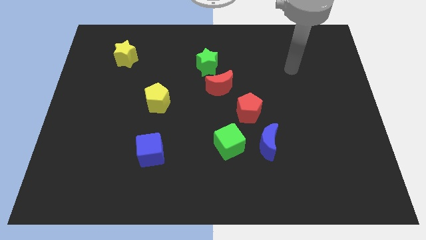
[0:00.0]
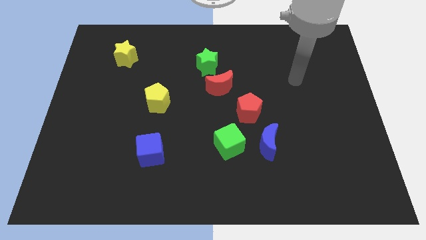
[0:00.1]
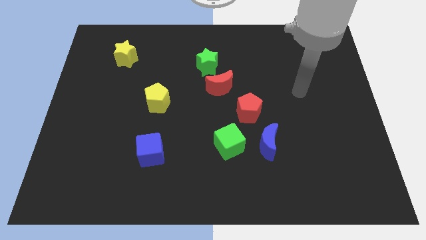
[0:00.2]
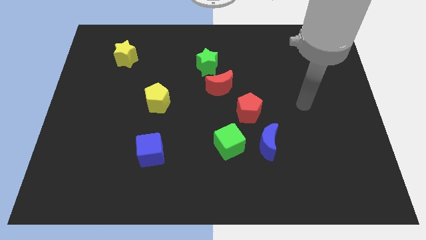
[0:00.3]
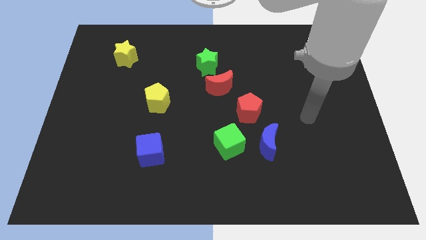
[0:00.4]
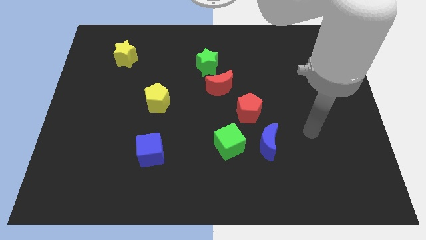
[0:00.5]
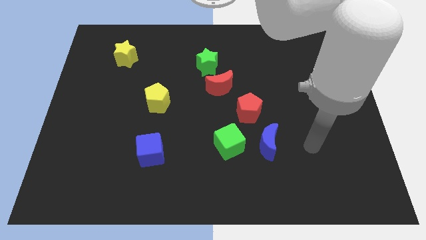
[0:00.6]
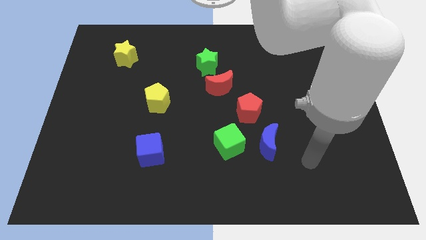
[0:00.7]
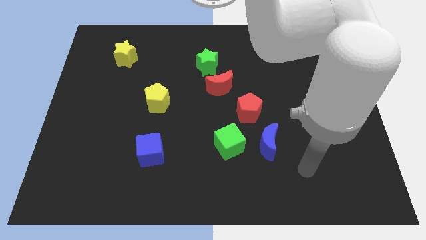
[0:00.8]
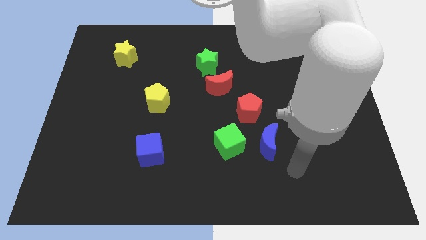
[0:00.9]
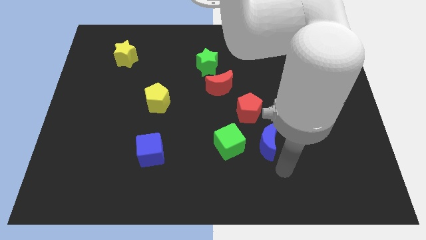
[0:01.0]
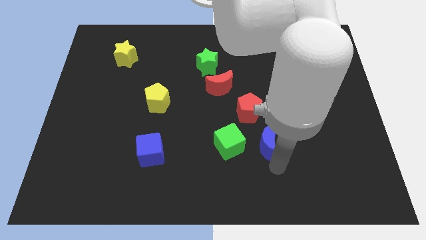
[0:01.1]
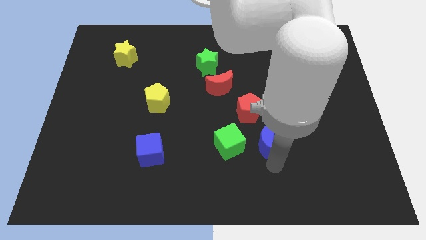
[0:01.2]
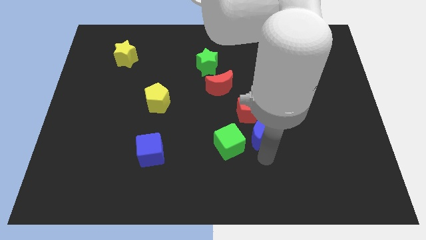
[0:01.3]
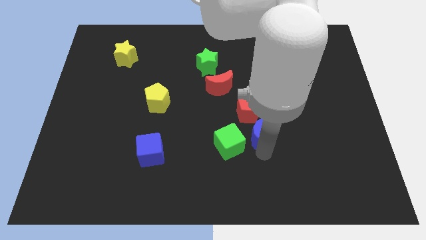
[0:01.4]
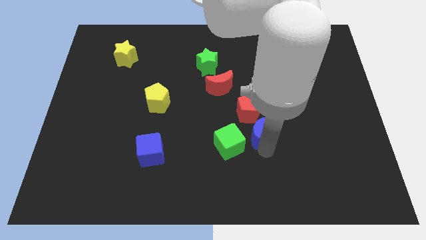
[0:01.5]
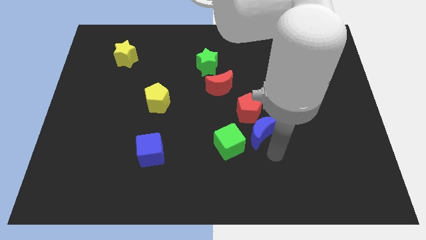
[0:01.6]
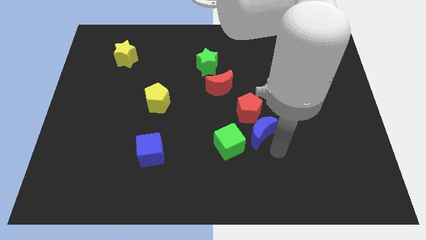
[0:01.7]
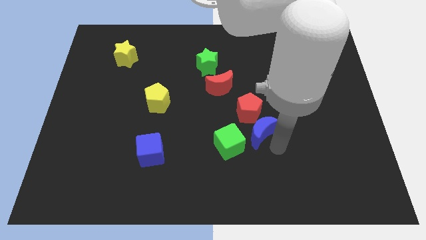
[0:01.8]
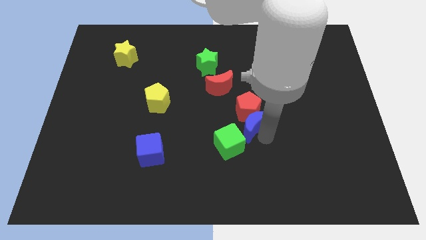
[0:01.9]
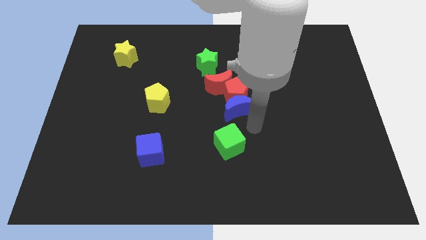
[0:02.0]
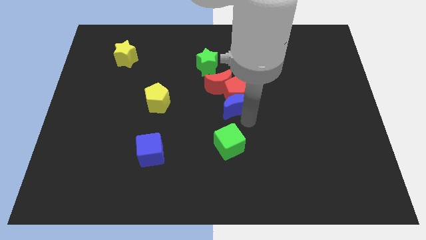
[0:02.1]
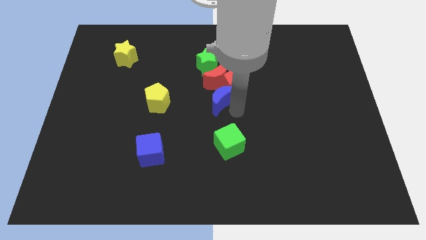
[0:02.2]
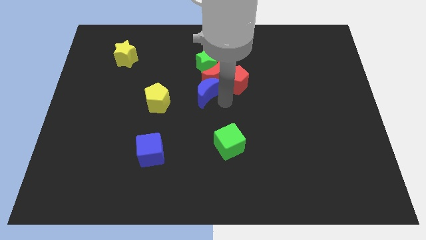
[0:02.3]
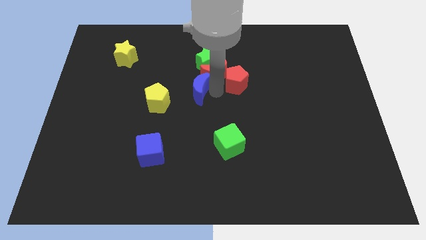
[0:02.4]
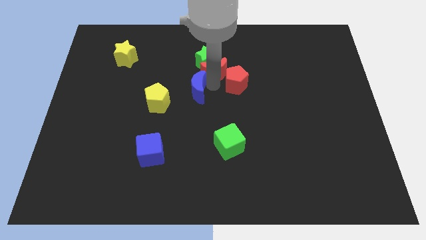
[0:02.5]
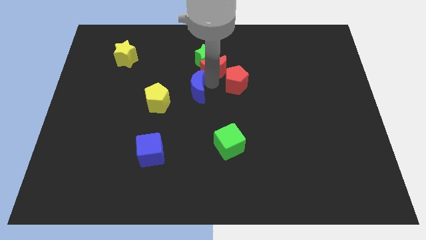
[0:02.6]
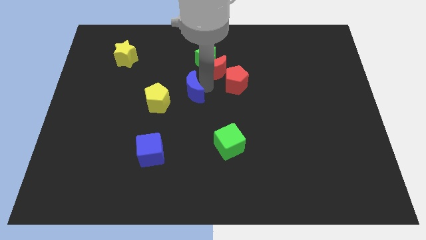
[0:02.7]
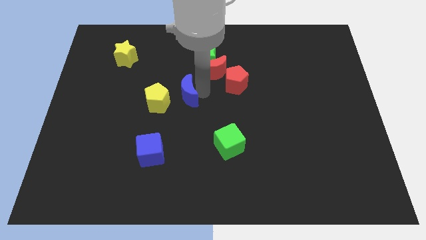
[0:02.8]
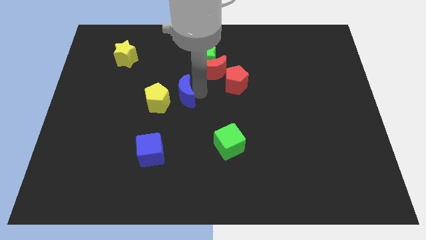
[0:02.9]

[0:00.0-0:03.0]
push the blue moon into the red pentagon

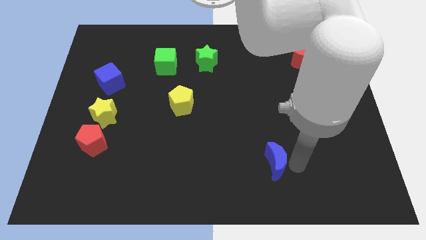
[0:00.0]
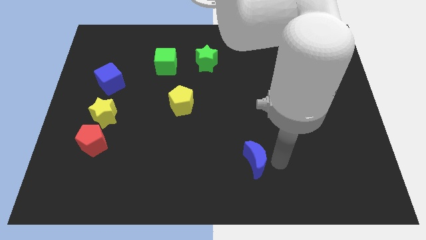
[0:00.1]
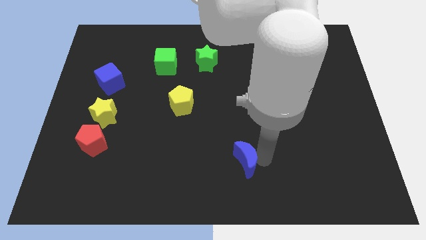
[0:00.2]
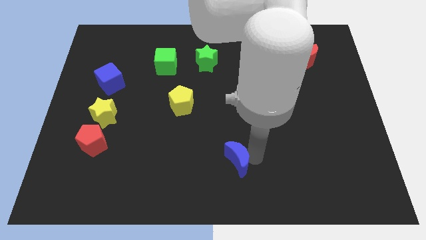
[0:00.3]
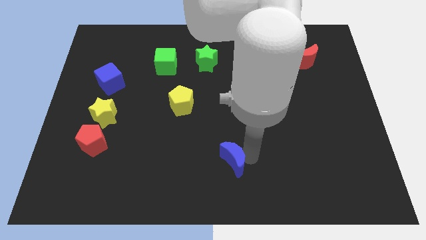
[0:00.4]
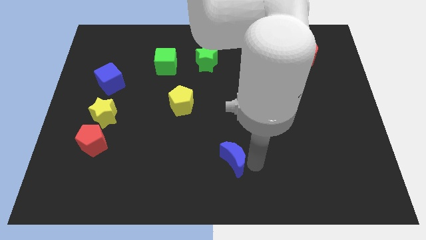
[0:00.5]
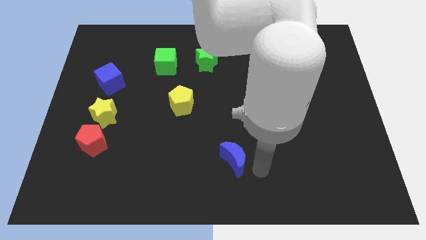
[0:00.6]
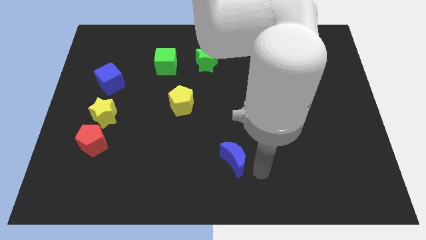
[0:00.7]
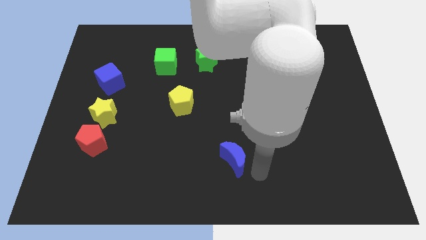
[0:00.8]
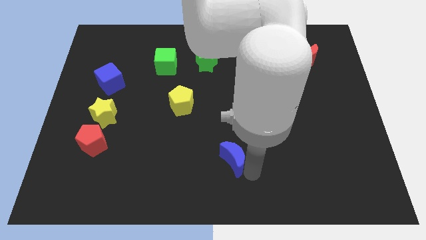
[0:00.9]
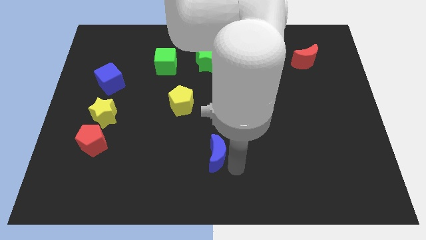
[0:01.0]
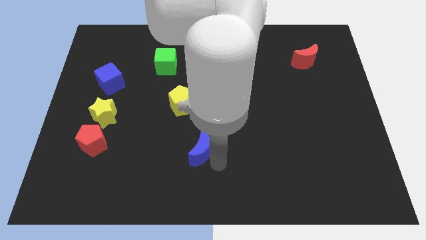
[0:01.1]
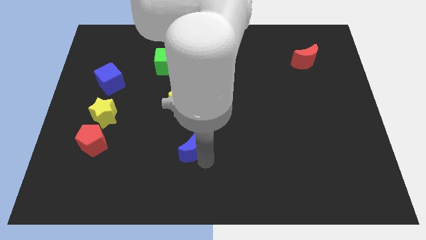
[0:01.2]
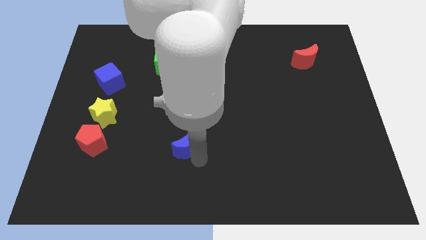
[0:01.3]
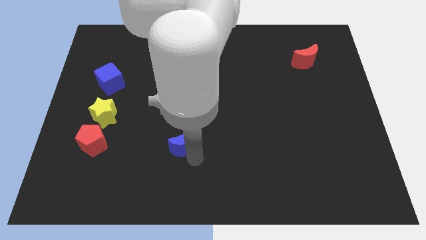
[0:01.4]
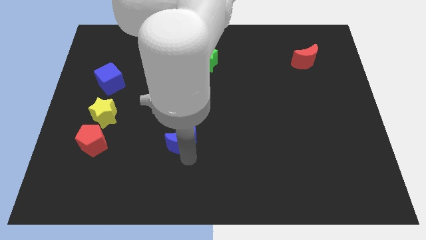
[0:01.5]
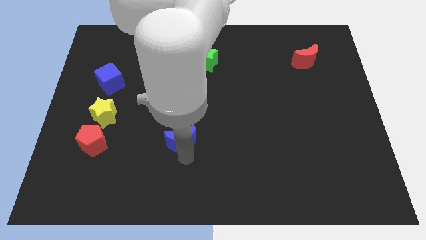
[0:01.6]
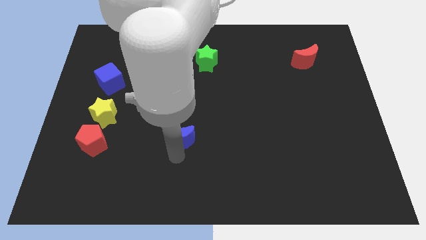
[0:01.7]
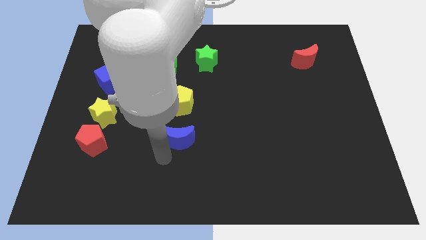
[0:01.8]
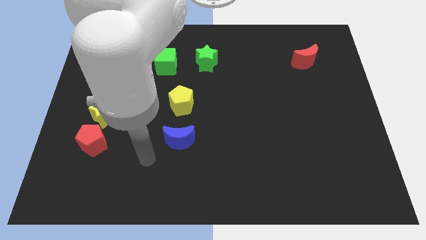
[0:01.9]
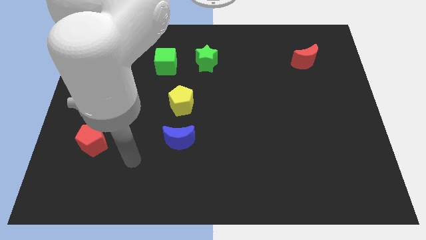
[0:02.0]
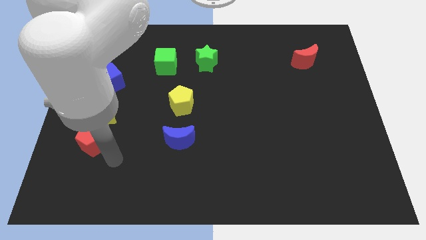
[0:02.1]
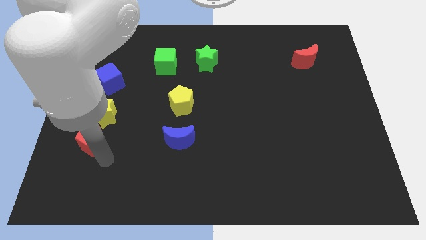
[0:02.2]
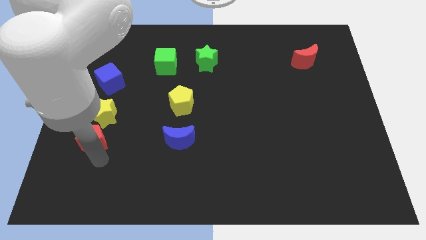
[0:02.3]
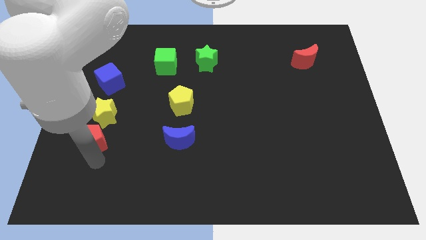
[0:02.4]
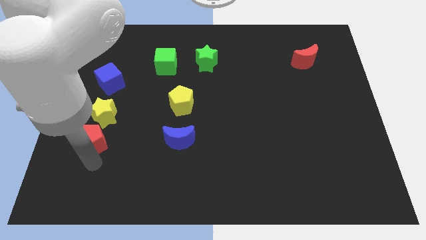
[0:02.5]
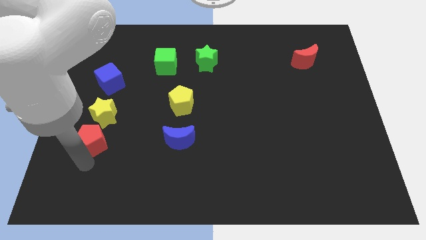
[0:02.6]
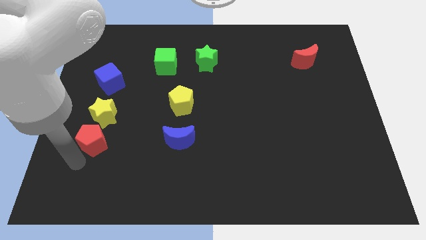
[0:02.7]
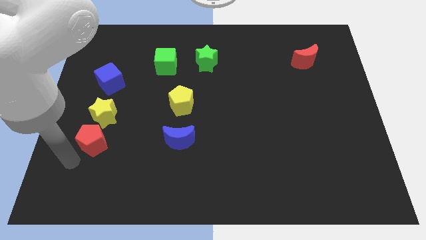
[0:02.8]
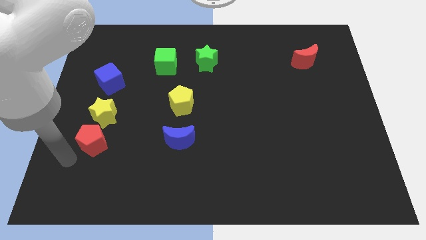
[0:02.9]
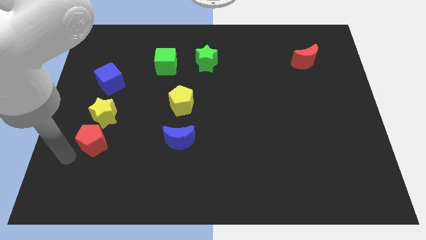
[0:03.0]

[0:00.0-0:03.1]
place the blue moon parallel to yellow pentagon

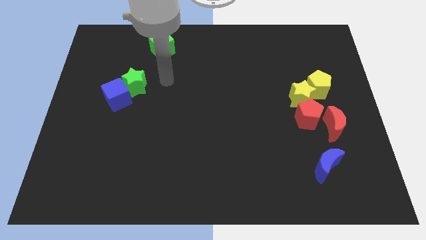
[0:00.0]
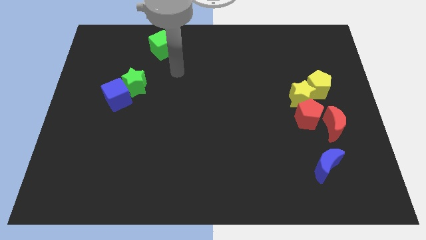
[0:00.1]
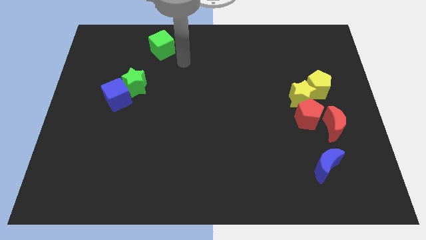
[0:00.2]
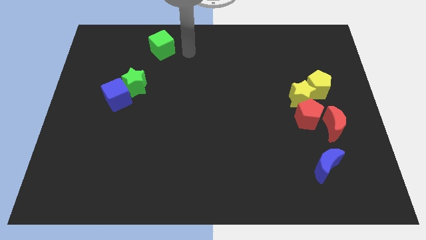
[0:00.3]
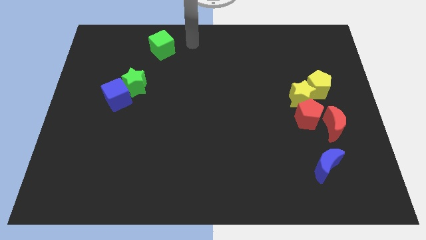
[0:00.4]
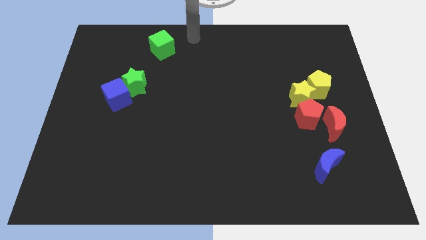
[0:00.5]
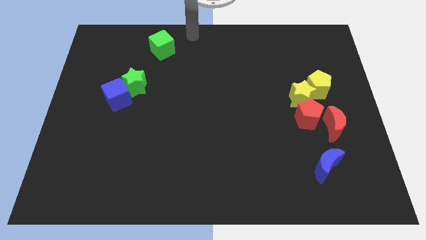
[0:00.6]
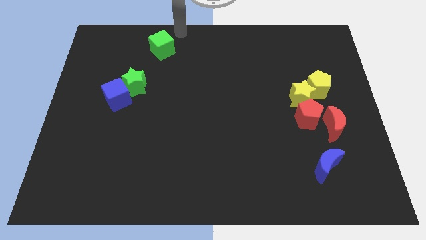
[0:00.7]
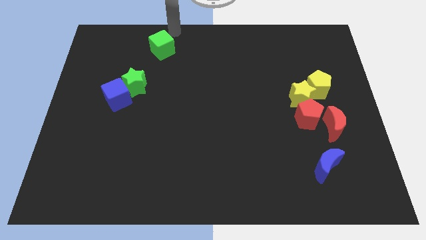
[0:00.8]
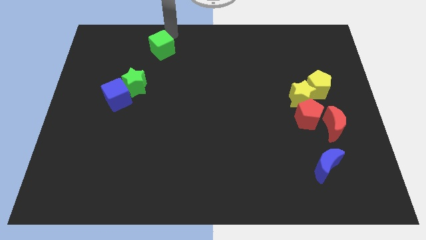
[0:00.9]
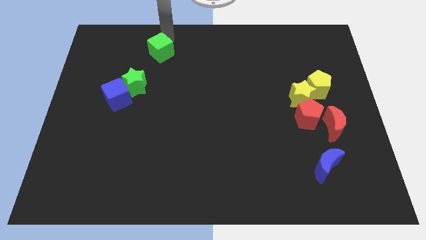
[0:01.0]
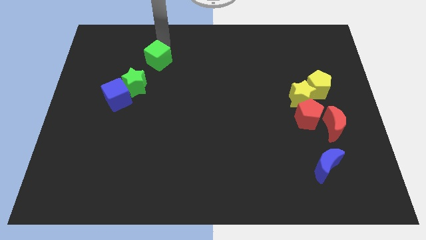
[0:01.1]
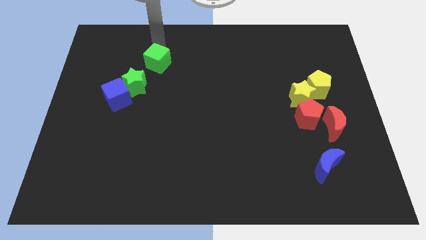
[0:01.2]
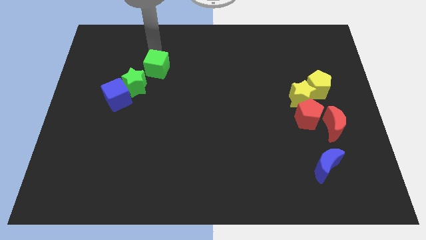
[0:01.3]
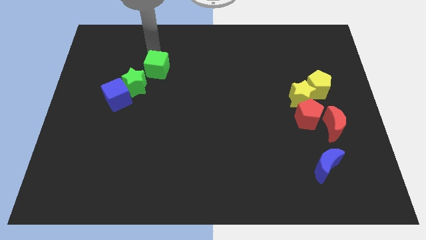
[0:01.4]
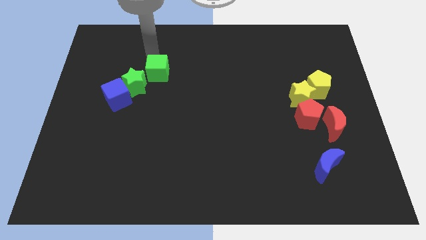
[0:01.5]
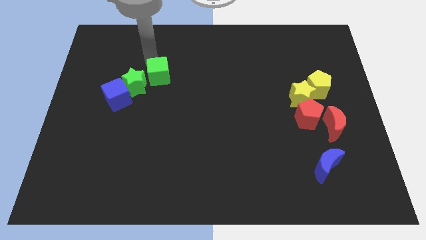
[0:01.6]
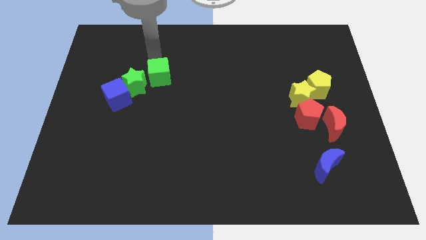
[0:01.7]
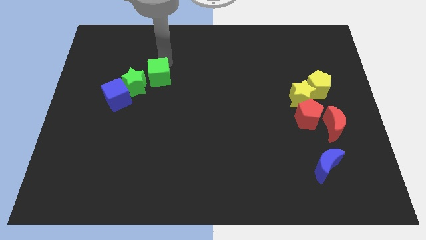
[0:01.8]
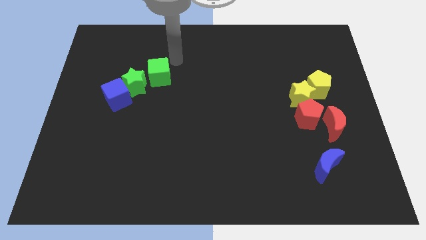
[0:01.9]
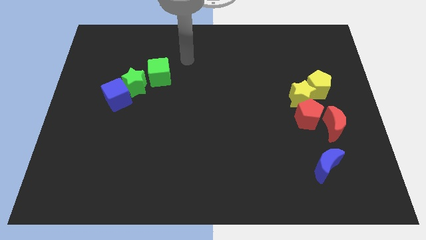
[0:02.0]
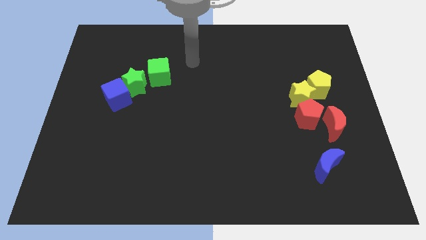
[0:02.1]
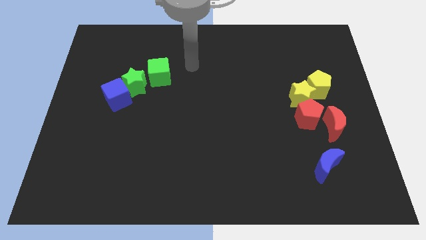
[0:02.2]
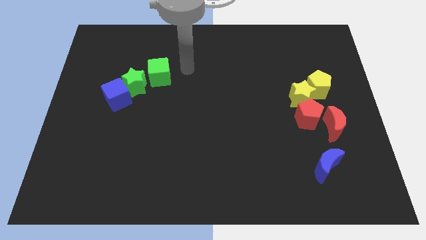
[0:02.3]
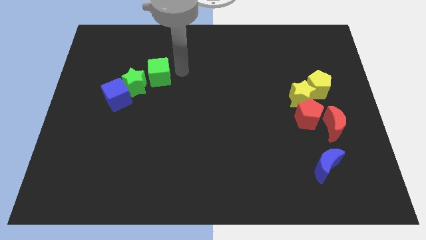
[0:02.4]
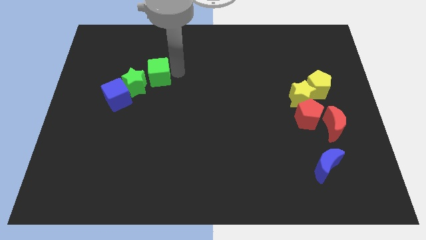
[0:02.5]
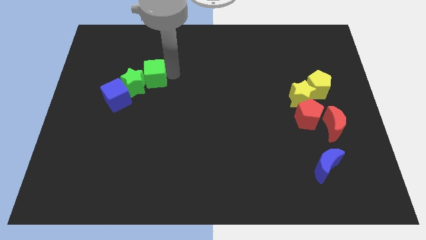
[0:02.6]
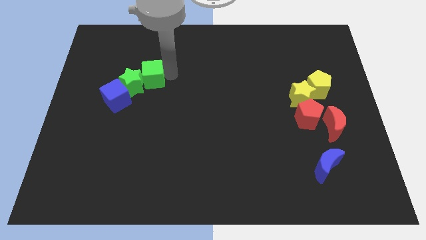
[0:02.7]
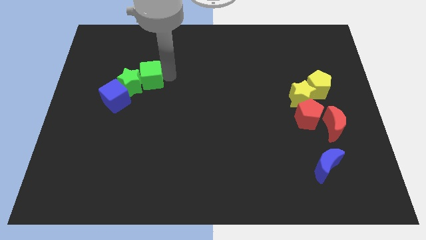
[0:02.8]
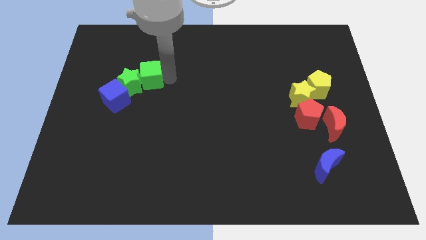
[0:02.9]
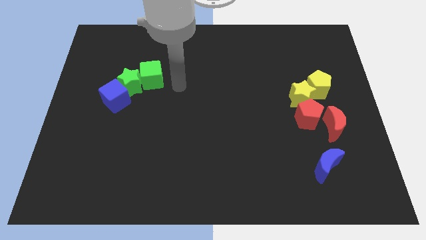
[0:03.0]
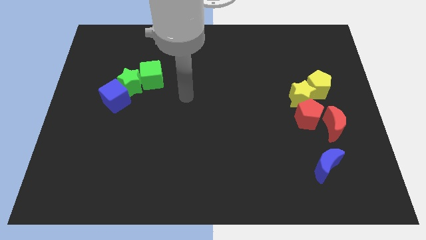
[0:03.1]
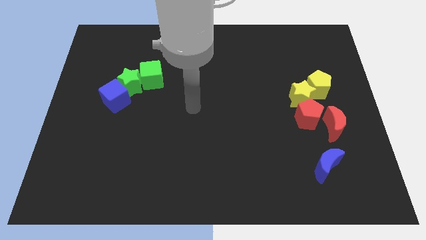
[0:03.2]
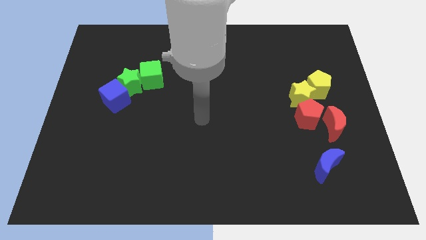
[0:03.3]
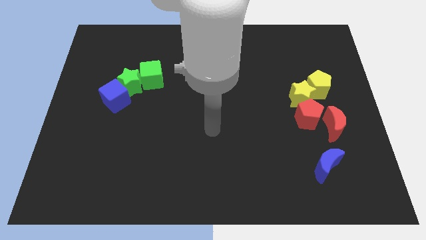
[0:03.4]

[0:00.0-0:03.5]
push the green cube to the right of the green star
